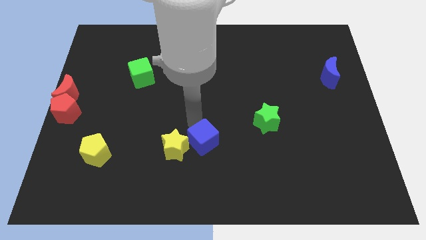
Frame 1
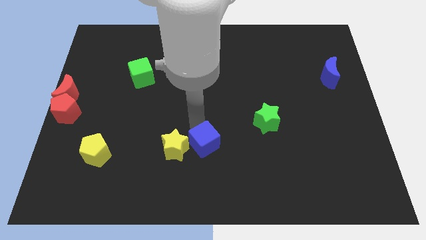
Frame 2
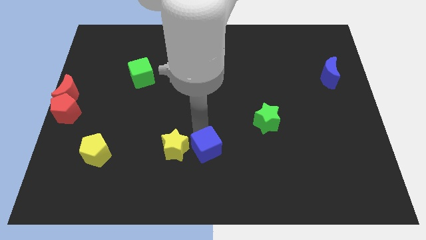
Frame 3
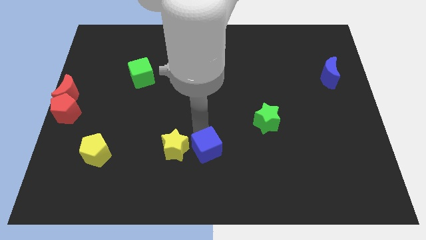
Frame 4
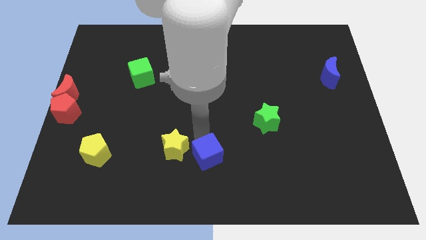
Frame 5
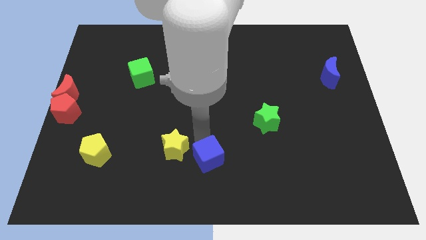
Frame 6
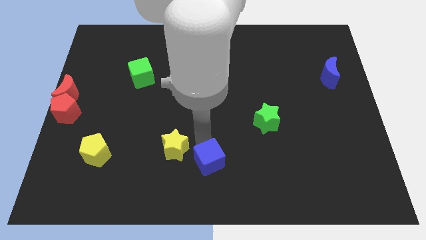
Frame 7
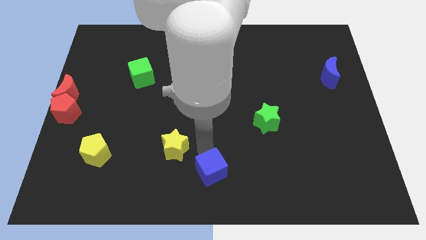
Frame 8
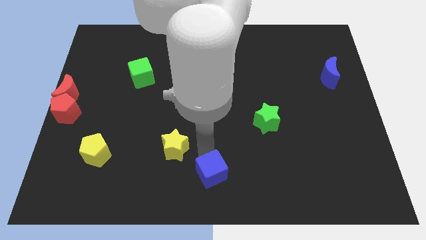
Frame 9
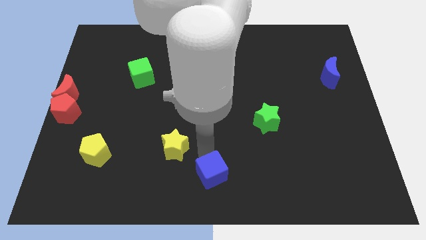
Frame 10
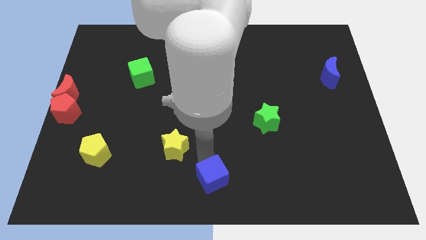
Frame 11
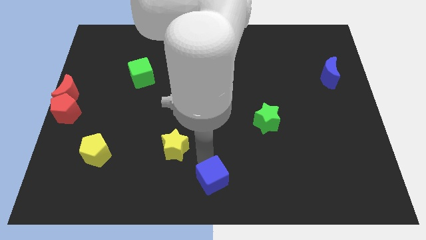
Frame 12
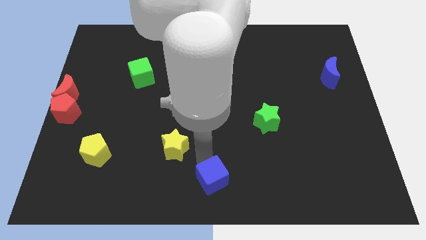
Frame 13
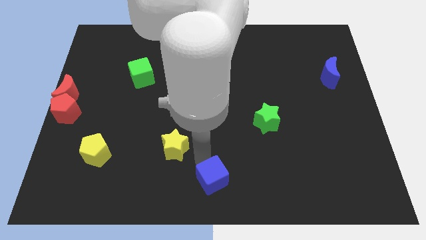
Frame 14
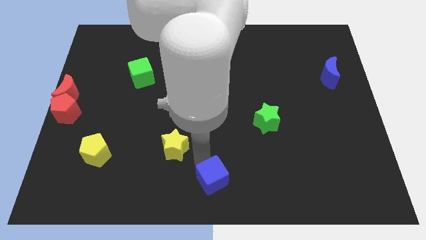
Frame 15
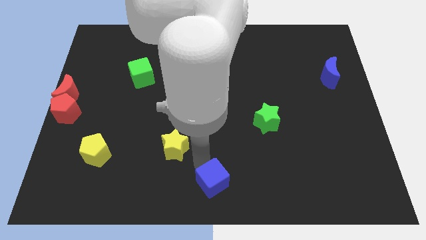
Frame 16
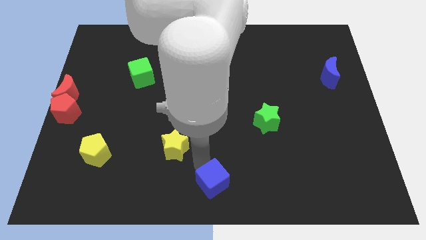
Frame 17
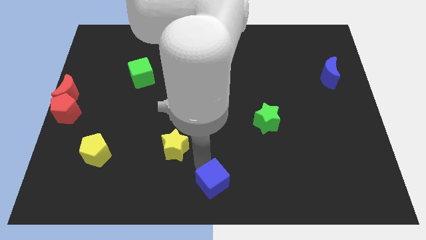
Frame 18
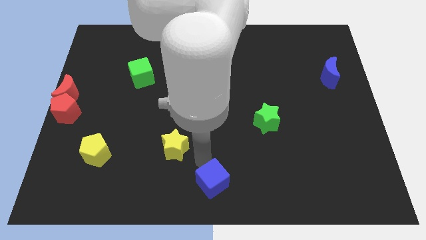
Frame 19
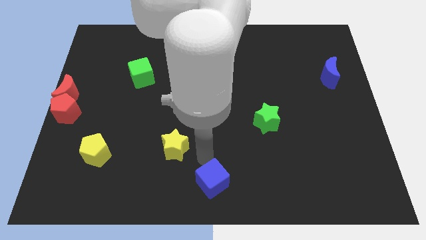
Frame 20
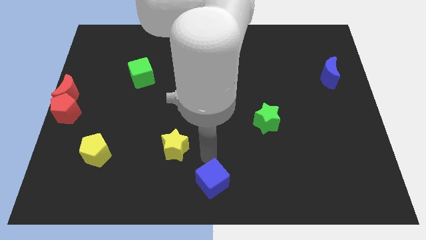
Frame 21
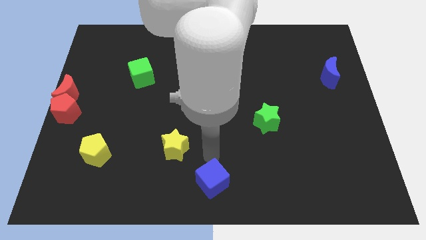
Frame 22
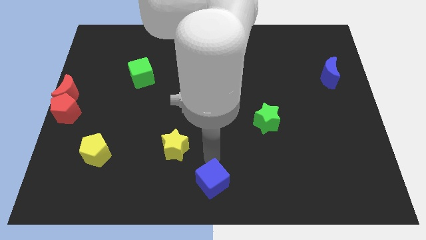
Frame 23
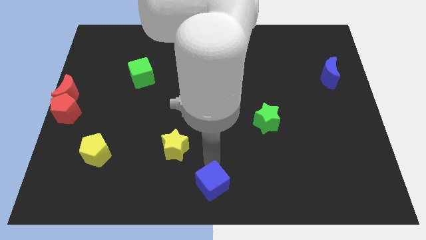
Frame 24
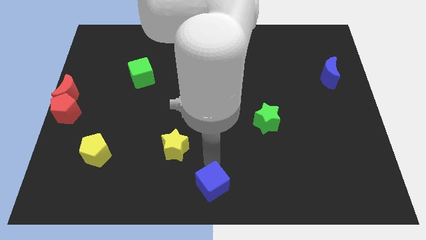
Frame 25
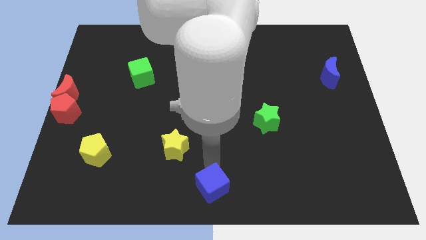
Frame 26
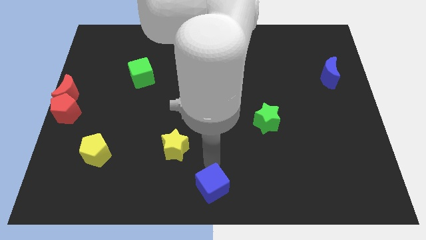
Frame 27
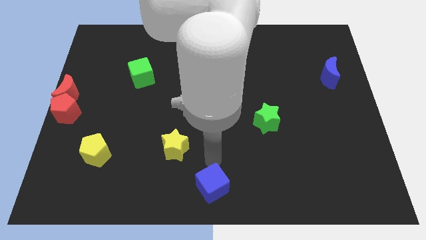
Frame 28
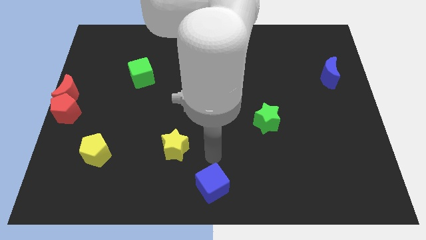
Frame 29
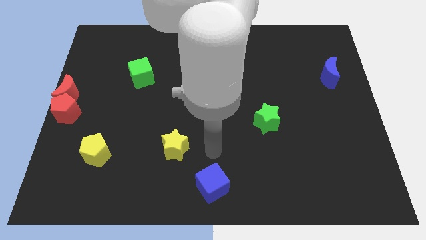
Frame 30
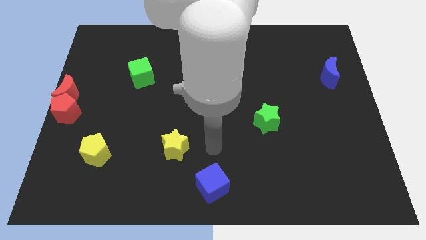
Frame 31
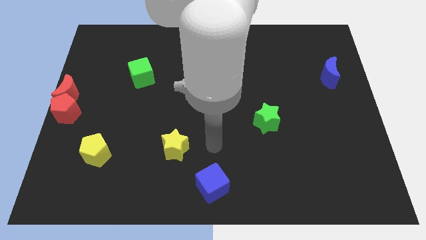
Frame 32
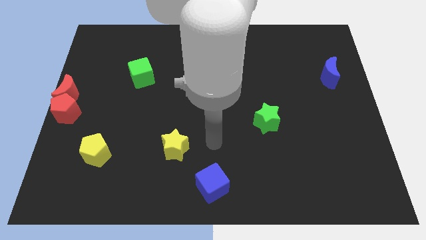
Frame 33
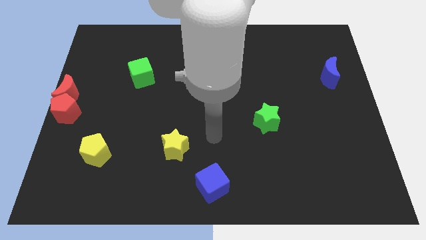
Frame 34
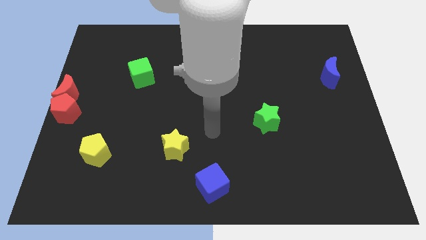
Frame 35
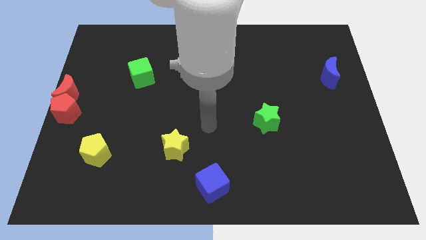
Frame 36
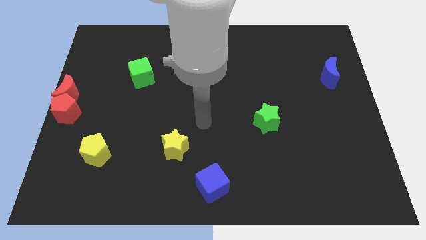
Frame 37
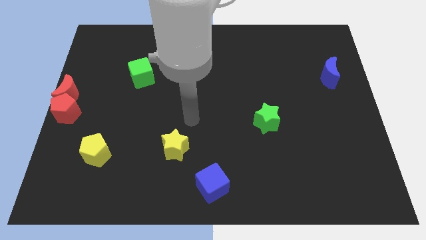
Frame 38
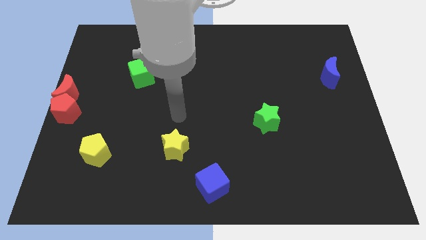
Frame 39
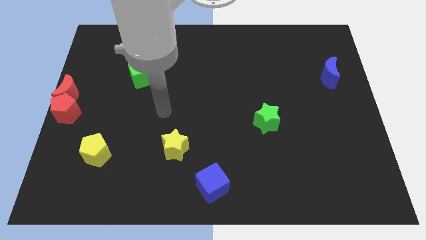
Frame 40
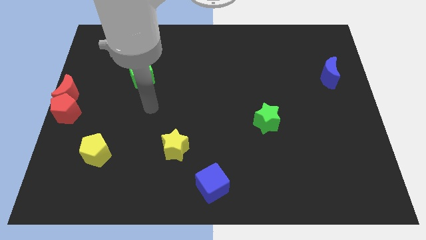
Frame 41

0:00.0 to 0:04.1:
move the blue cube to the bottom middle

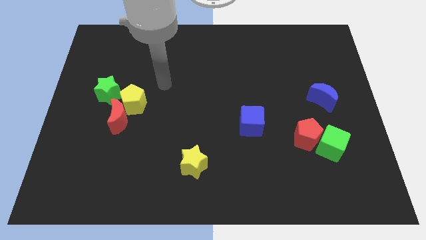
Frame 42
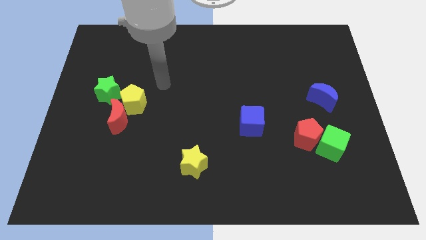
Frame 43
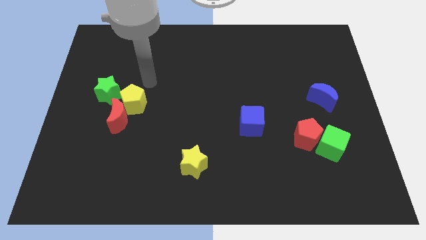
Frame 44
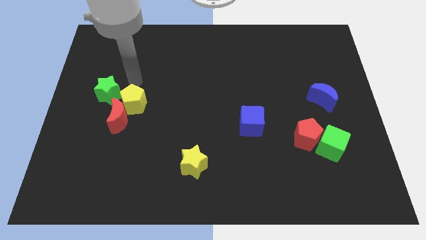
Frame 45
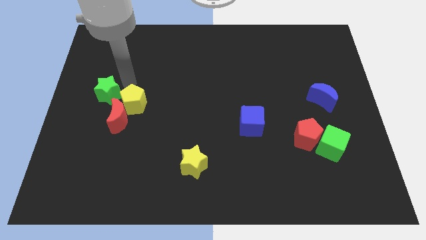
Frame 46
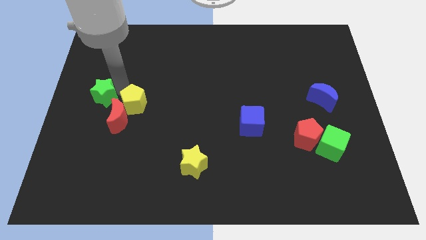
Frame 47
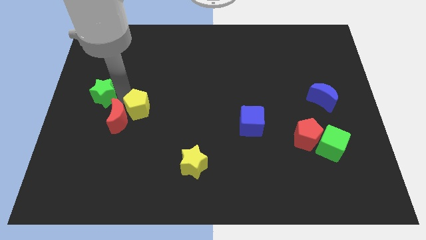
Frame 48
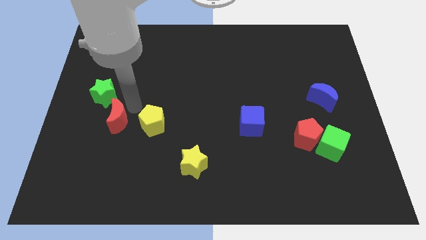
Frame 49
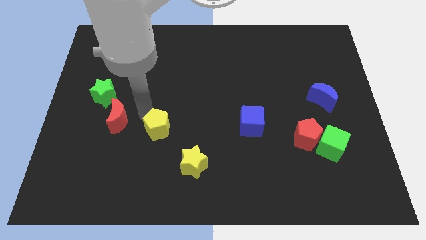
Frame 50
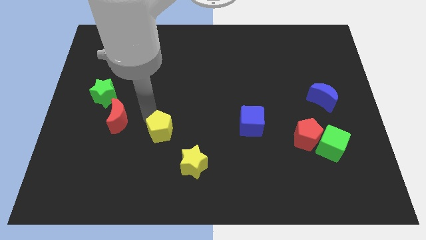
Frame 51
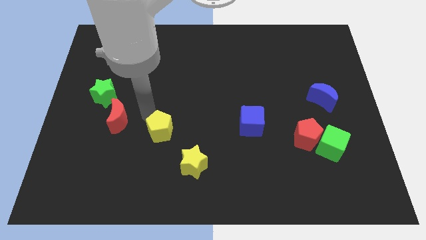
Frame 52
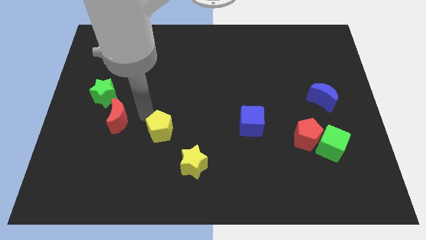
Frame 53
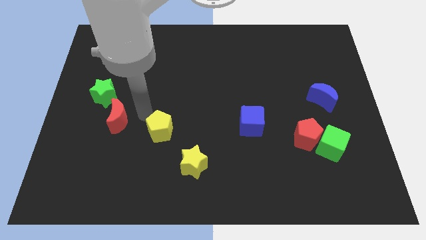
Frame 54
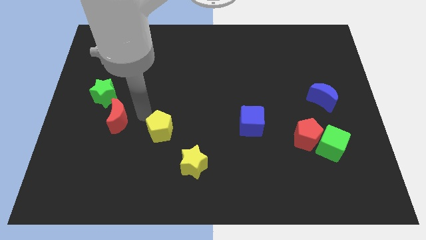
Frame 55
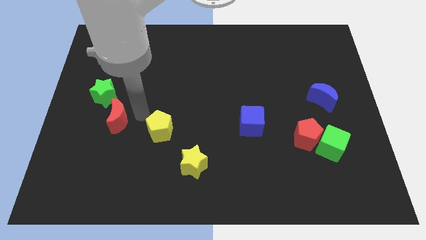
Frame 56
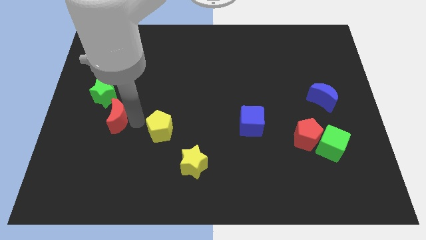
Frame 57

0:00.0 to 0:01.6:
push the yellow pentagon towards the yellow star

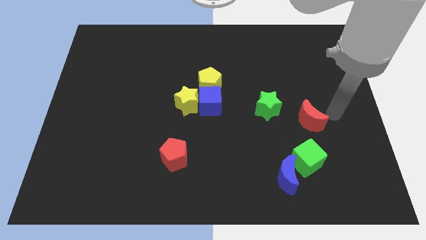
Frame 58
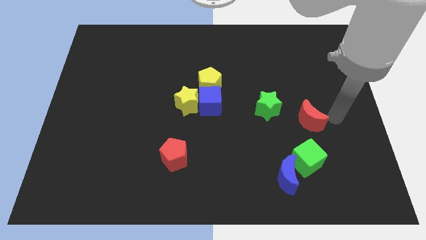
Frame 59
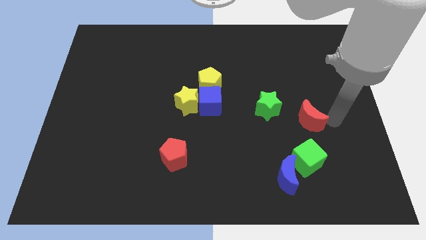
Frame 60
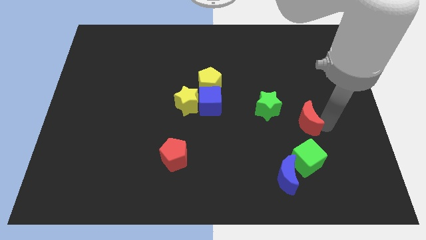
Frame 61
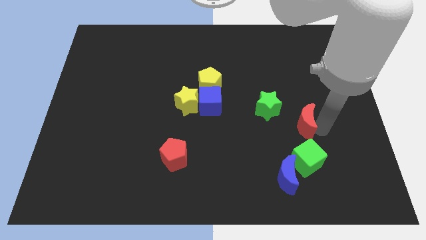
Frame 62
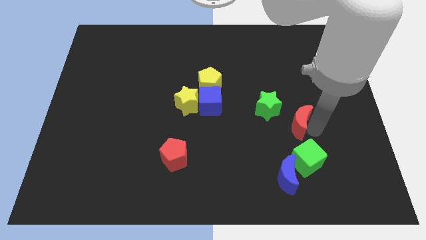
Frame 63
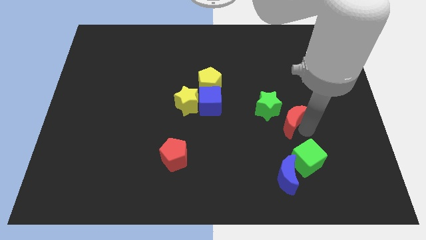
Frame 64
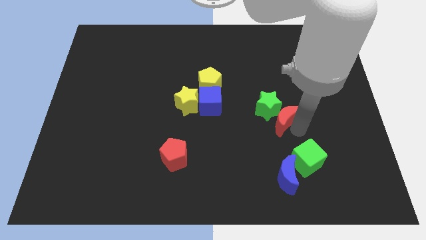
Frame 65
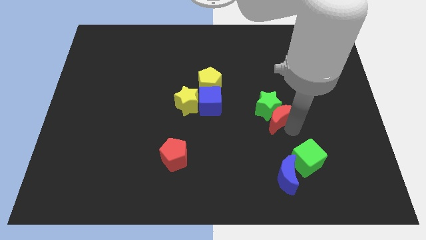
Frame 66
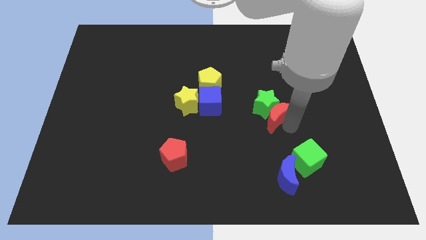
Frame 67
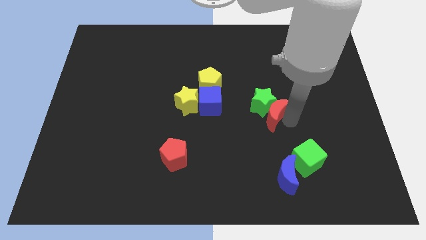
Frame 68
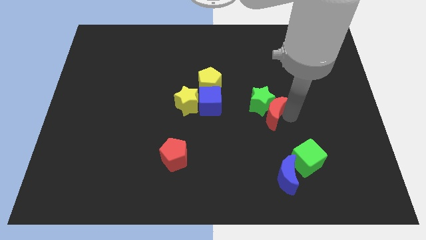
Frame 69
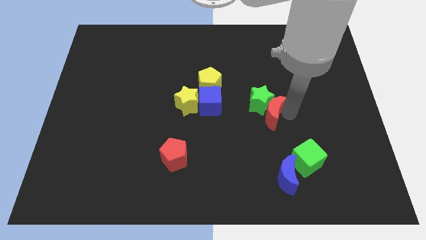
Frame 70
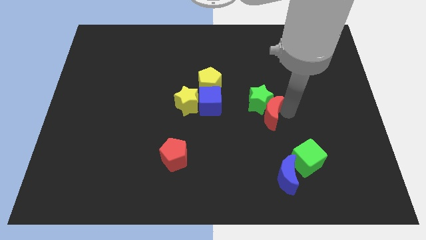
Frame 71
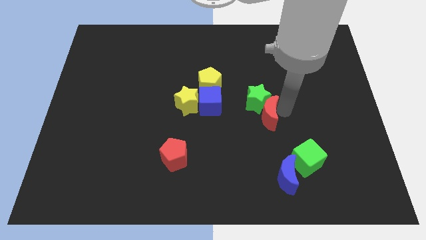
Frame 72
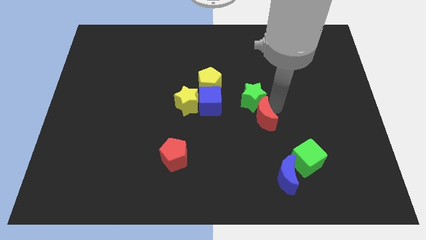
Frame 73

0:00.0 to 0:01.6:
place the red crescent below to the green star

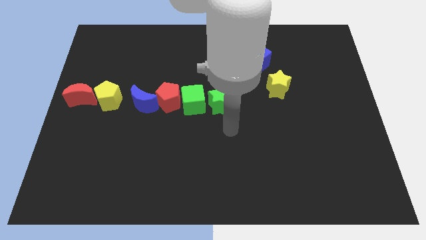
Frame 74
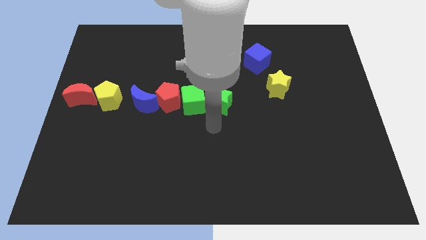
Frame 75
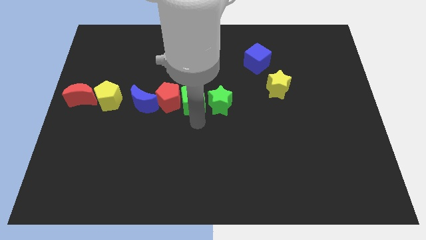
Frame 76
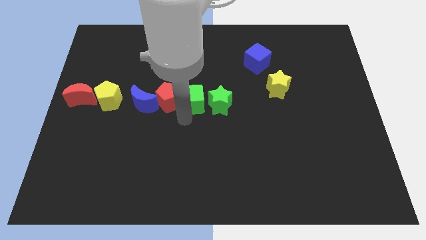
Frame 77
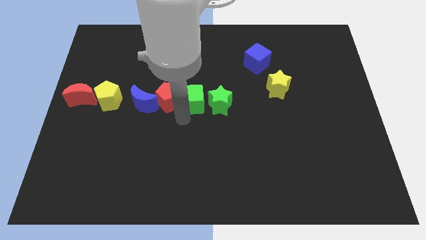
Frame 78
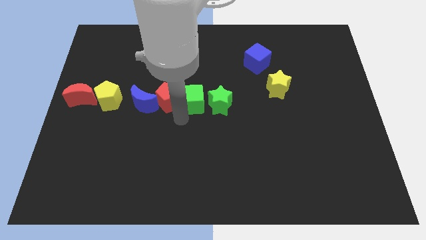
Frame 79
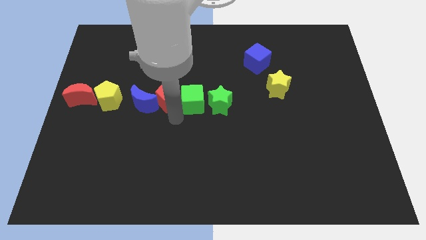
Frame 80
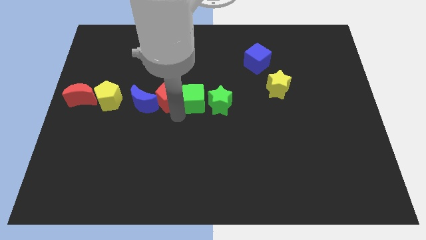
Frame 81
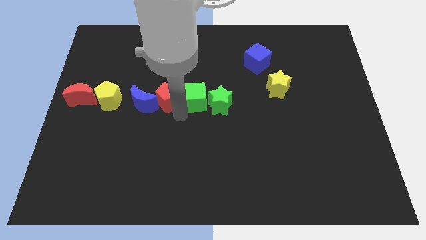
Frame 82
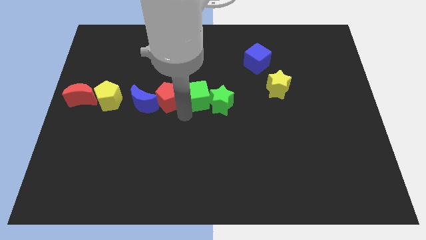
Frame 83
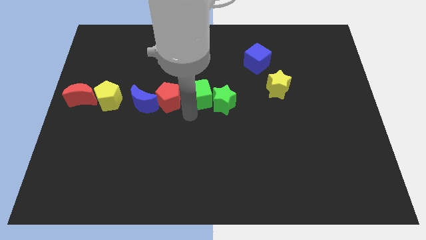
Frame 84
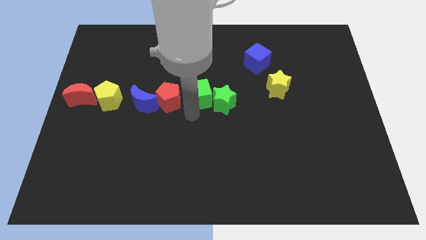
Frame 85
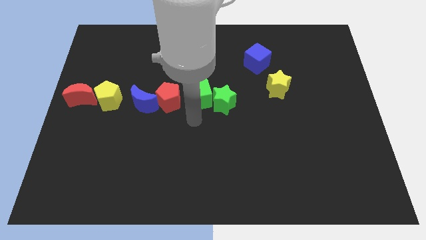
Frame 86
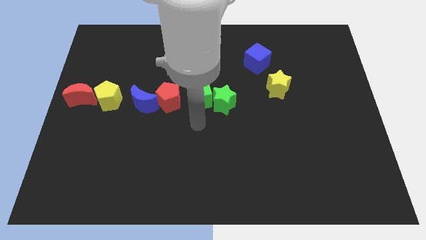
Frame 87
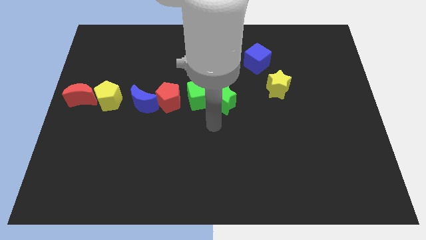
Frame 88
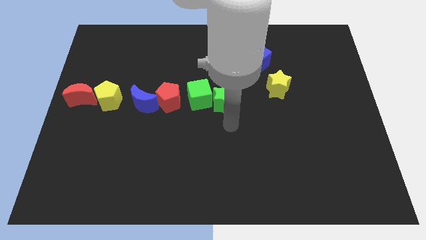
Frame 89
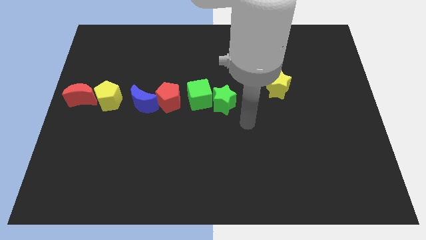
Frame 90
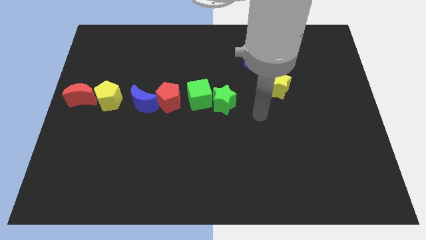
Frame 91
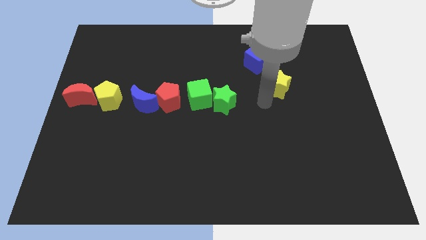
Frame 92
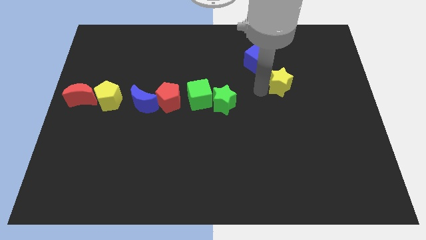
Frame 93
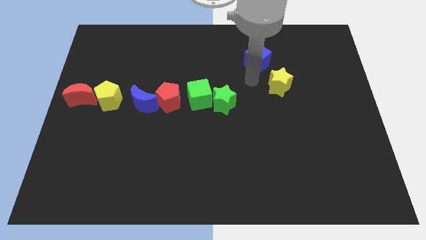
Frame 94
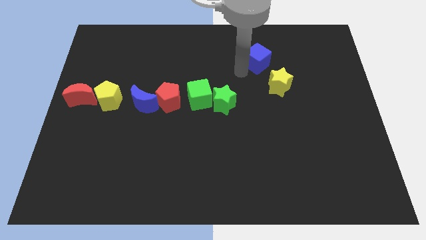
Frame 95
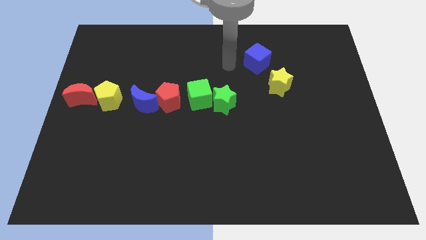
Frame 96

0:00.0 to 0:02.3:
separate the green cube from the red pentagon
